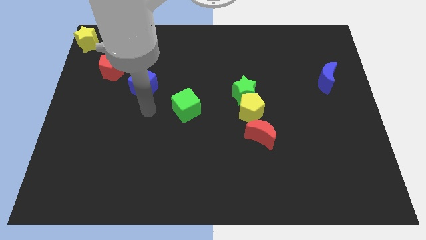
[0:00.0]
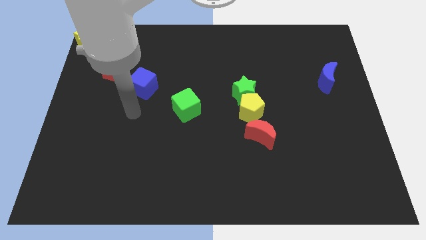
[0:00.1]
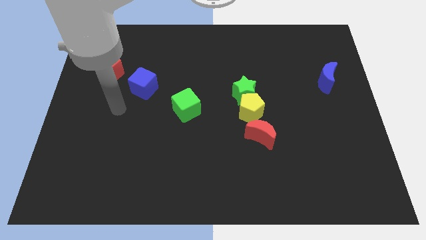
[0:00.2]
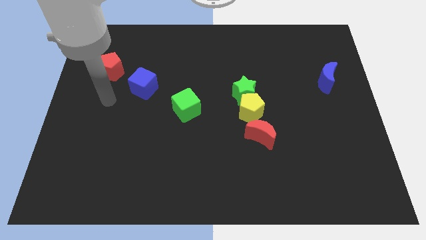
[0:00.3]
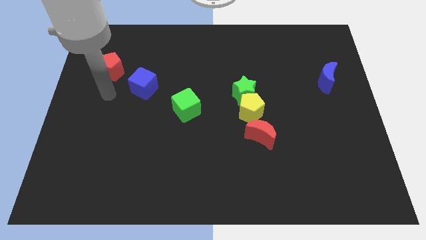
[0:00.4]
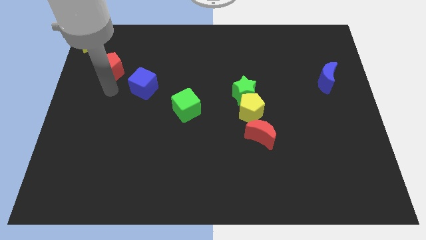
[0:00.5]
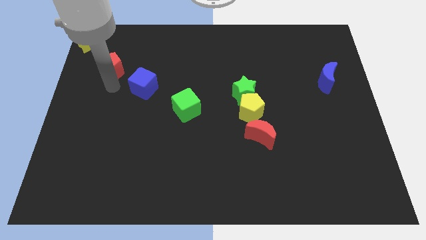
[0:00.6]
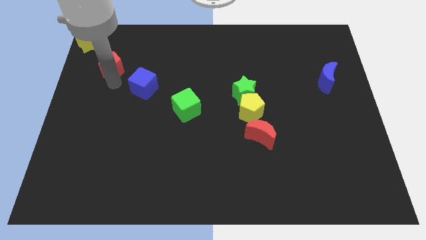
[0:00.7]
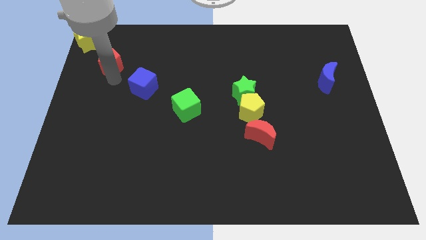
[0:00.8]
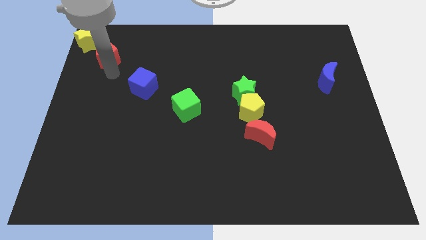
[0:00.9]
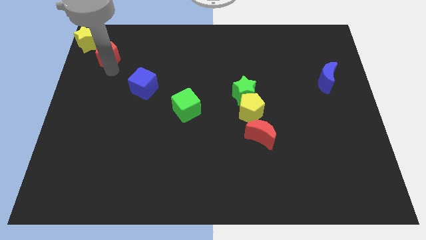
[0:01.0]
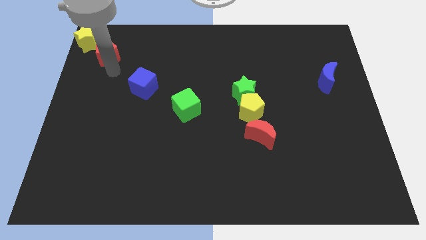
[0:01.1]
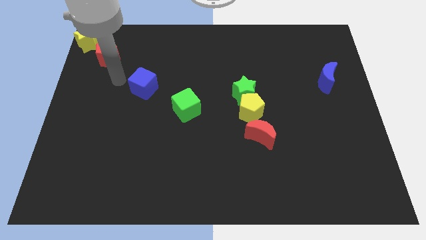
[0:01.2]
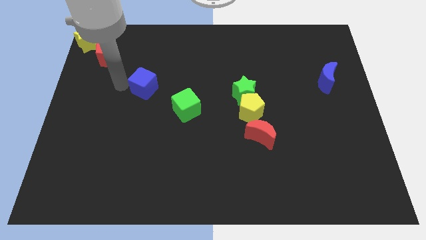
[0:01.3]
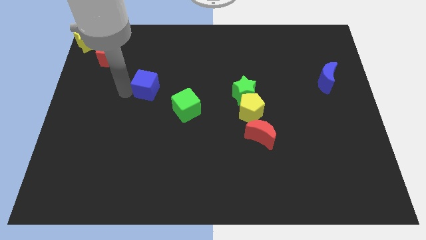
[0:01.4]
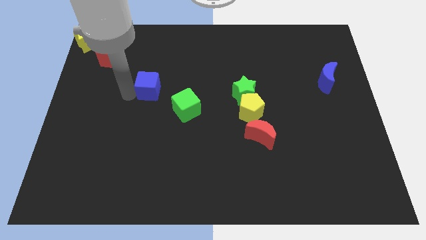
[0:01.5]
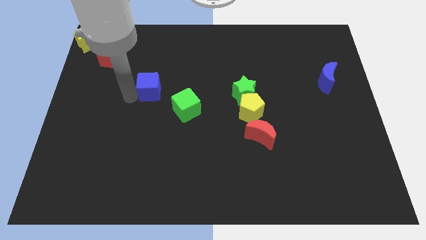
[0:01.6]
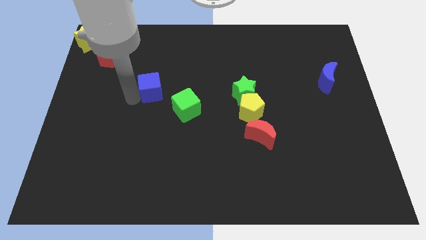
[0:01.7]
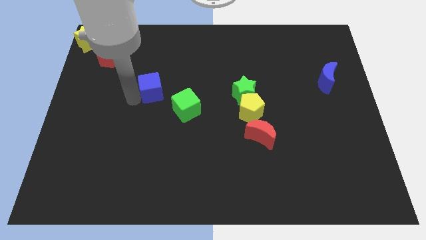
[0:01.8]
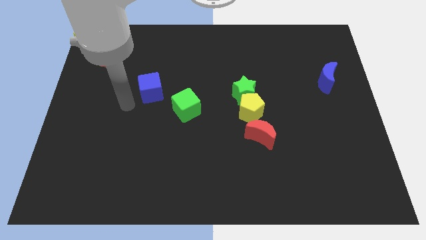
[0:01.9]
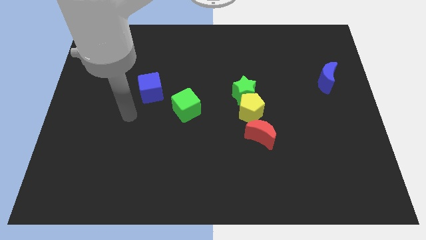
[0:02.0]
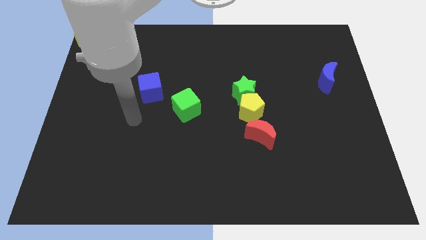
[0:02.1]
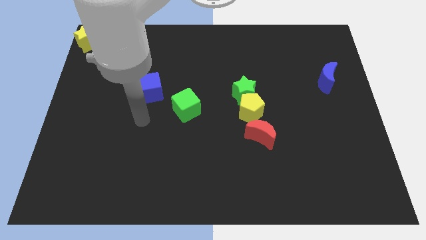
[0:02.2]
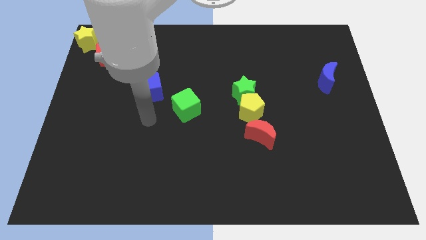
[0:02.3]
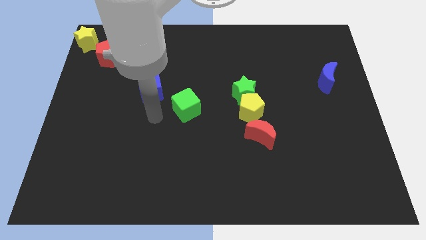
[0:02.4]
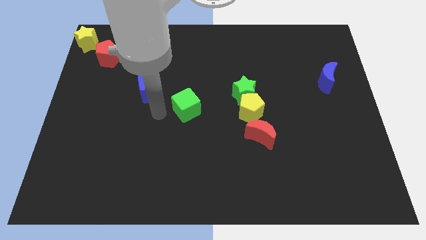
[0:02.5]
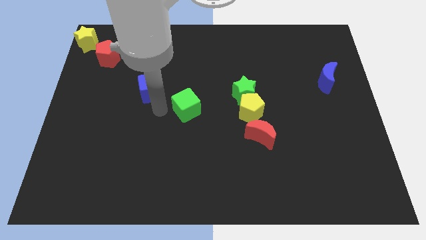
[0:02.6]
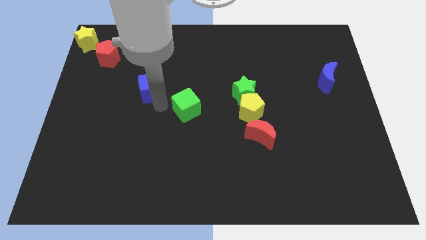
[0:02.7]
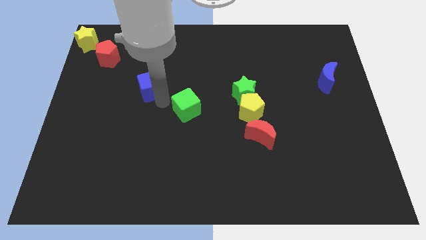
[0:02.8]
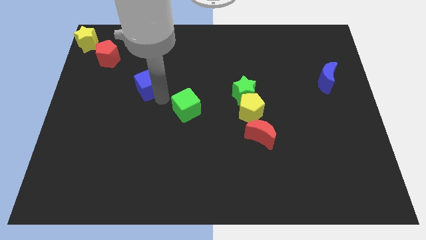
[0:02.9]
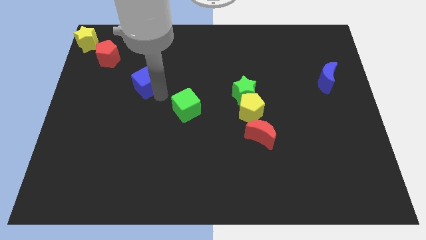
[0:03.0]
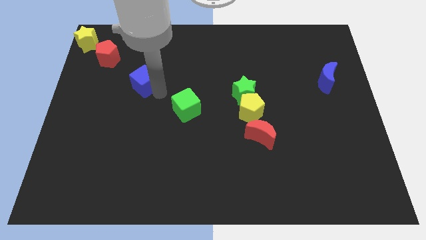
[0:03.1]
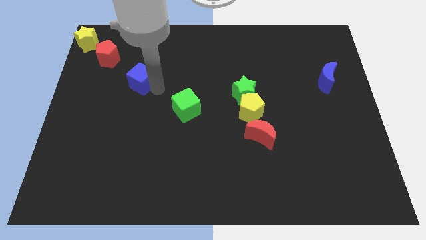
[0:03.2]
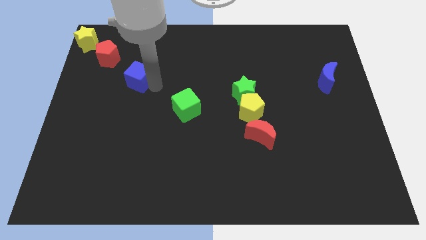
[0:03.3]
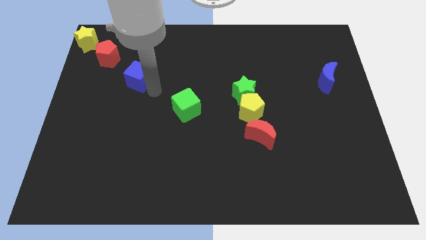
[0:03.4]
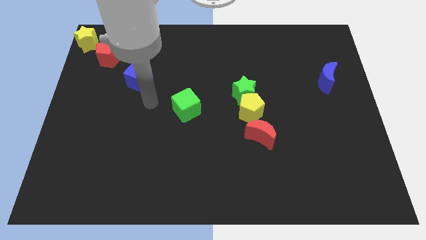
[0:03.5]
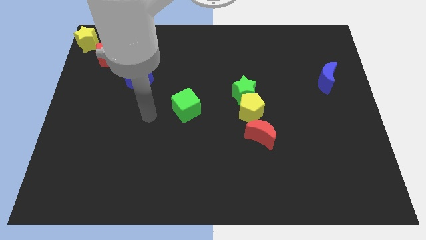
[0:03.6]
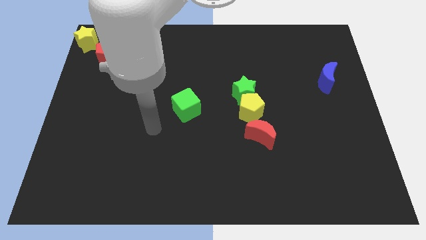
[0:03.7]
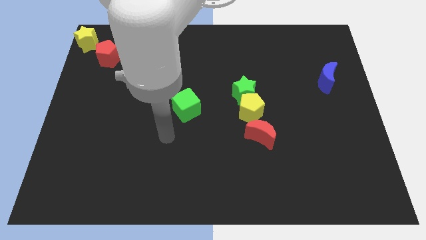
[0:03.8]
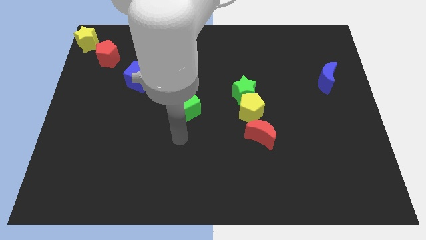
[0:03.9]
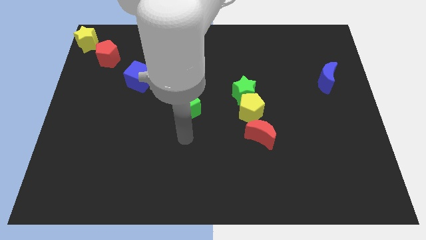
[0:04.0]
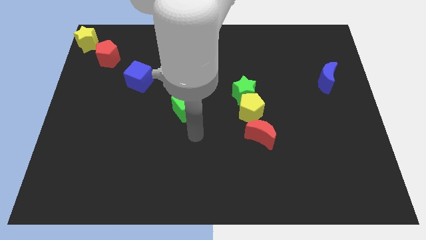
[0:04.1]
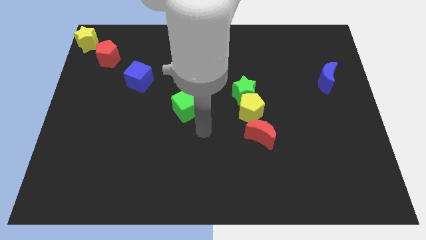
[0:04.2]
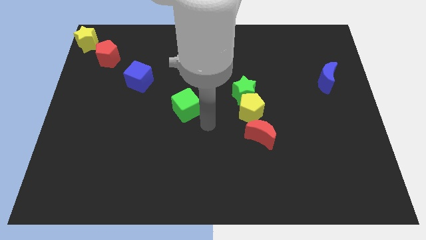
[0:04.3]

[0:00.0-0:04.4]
move blue cube to form a diagonal line with red pentagon and yellow star

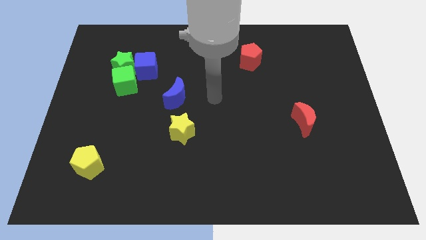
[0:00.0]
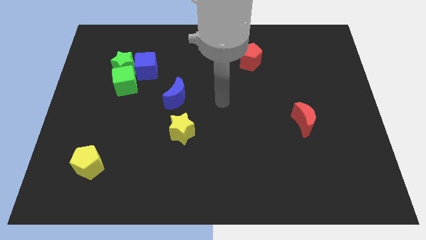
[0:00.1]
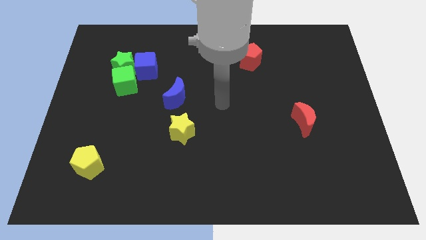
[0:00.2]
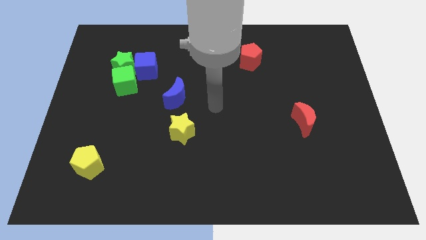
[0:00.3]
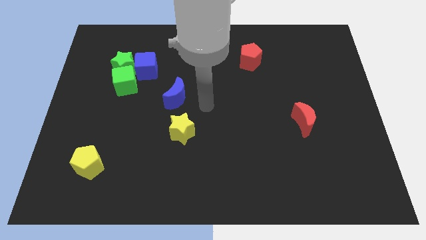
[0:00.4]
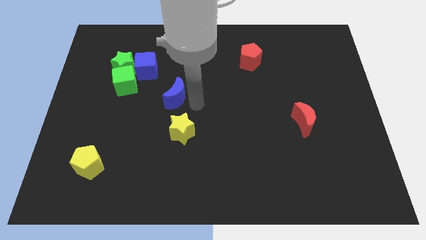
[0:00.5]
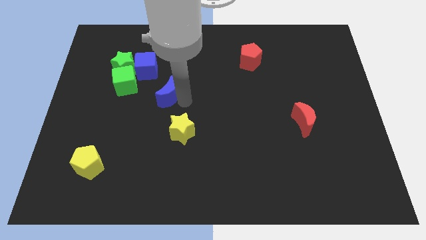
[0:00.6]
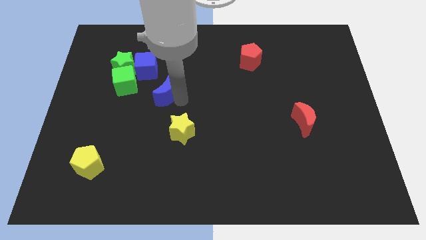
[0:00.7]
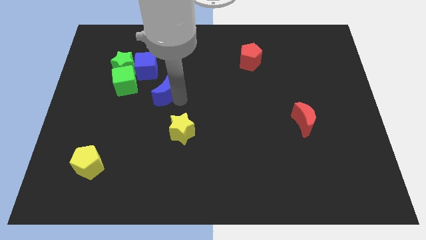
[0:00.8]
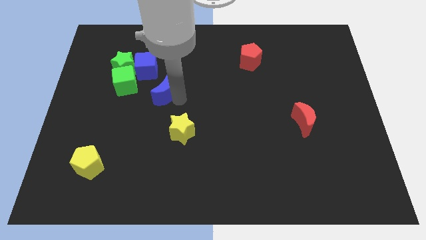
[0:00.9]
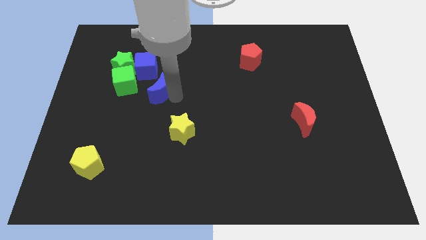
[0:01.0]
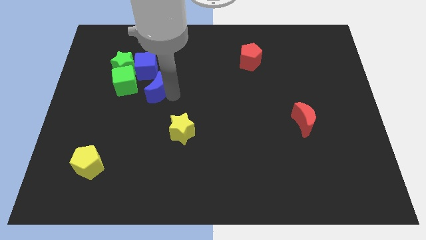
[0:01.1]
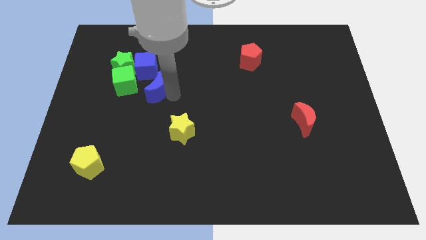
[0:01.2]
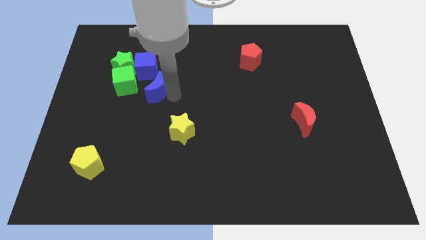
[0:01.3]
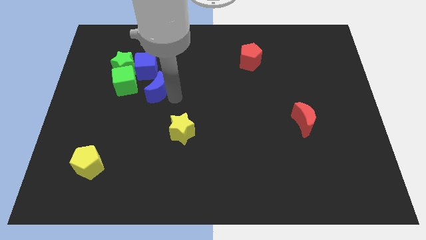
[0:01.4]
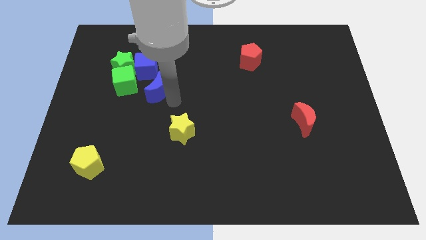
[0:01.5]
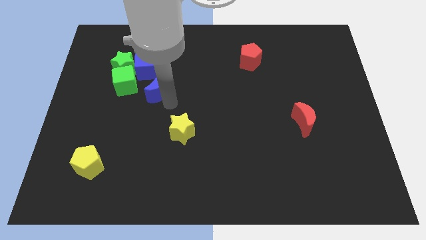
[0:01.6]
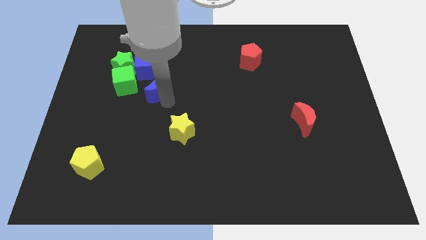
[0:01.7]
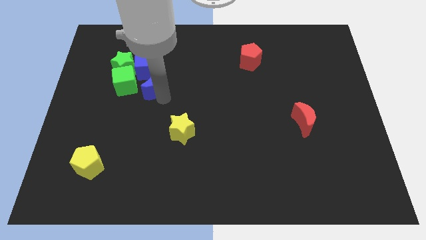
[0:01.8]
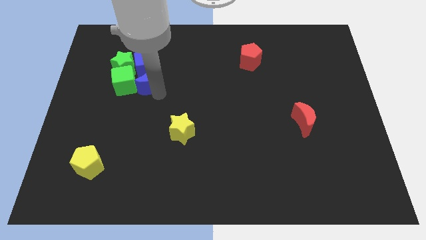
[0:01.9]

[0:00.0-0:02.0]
move the blue moon below the blue cube

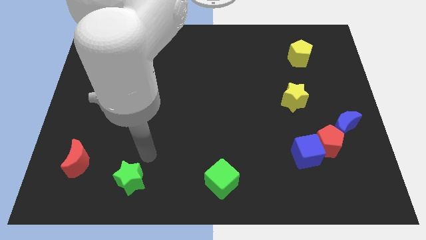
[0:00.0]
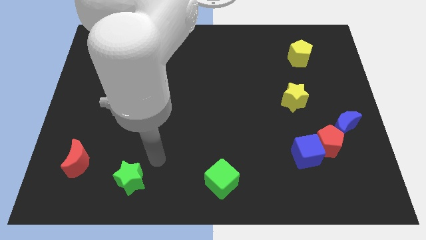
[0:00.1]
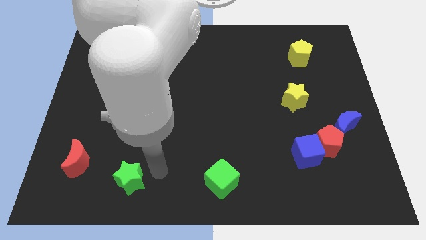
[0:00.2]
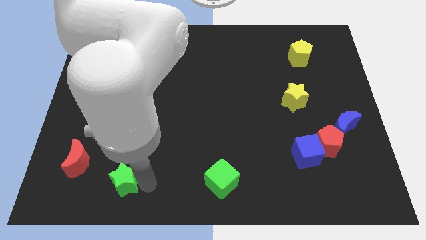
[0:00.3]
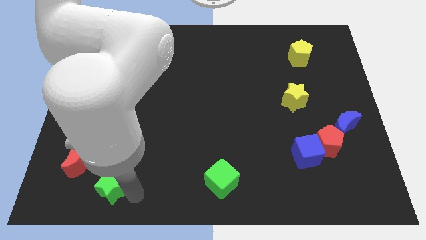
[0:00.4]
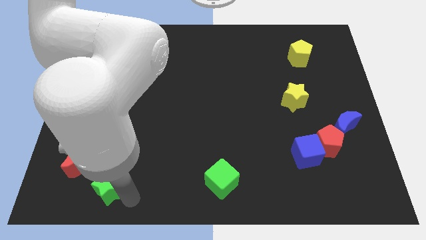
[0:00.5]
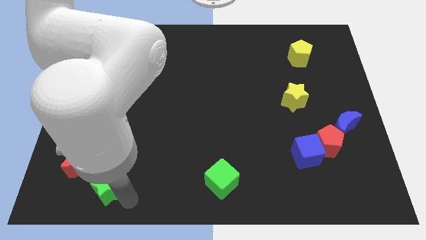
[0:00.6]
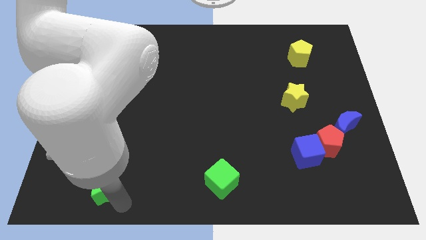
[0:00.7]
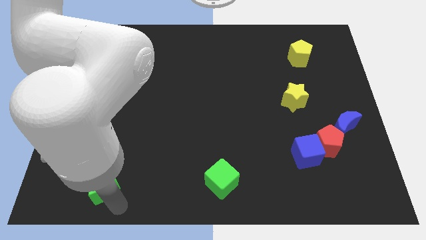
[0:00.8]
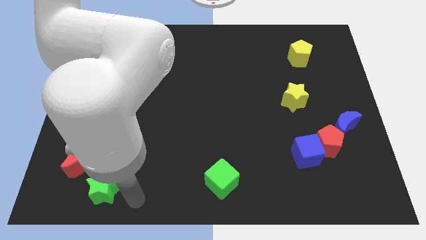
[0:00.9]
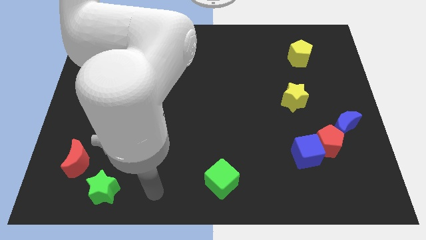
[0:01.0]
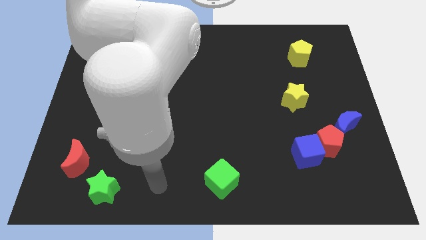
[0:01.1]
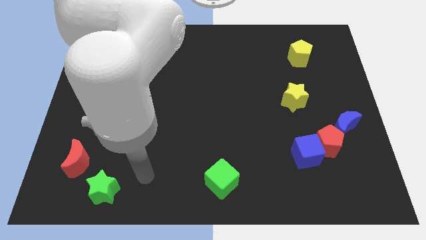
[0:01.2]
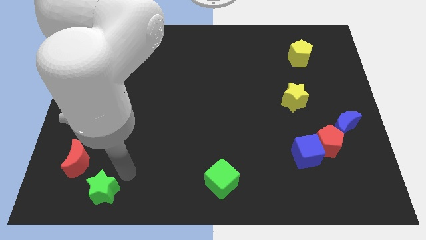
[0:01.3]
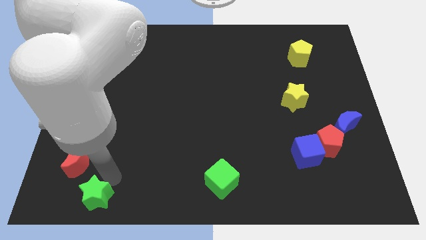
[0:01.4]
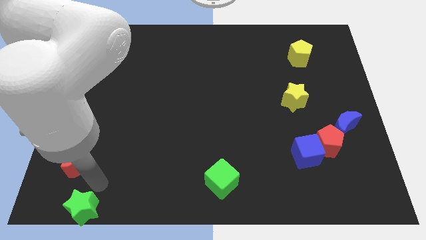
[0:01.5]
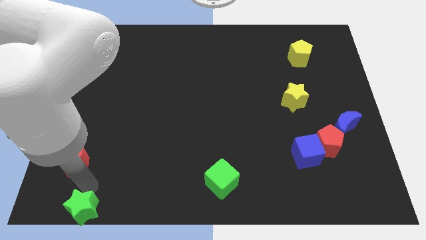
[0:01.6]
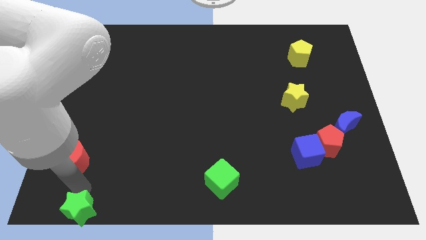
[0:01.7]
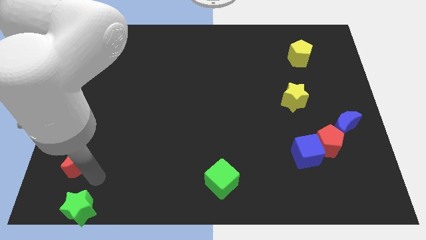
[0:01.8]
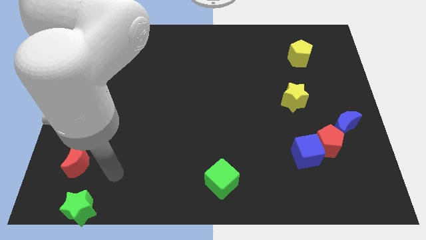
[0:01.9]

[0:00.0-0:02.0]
move the green star below the red moon

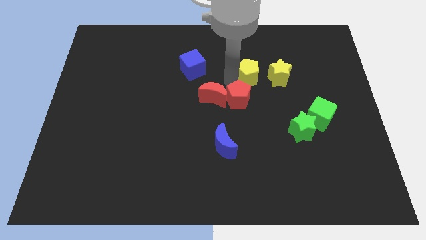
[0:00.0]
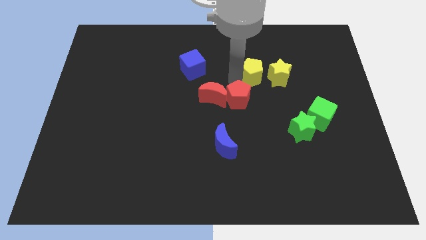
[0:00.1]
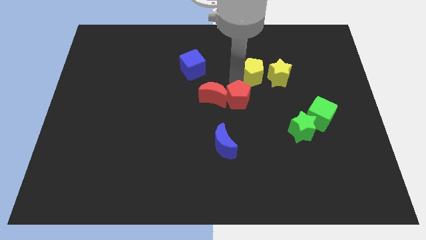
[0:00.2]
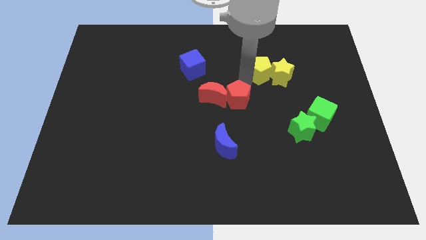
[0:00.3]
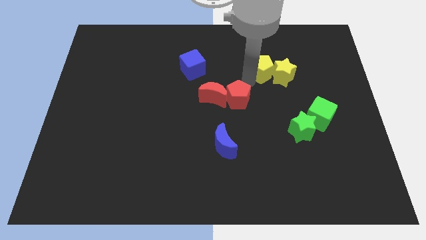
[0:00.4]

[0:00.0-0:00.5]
put the yellow pentagon to the left side of yellow star
